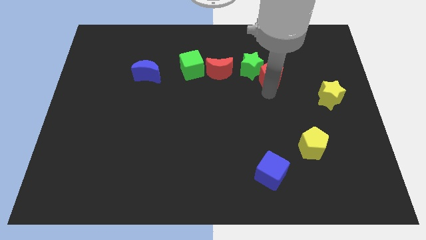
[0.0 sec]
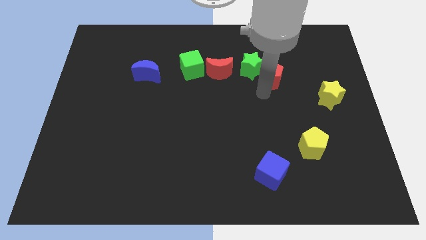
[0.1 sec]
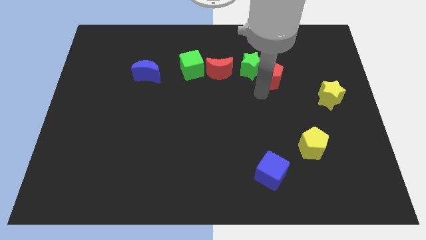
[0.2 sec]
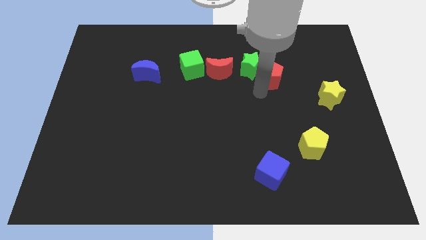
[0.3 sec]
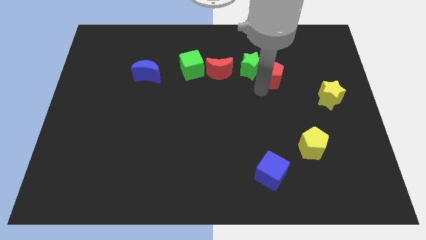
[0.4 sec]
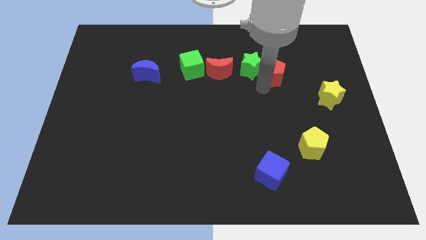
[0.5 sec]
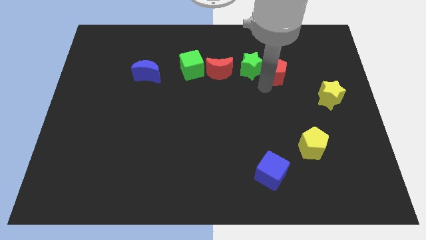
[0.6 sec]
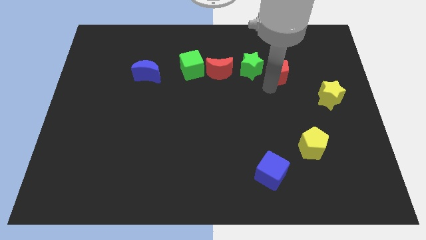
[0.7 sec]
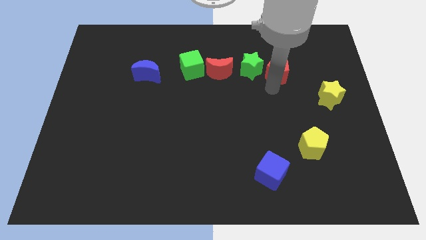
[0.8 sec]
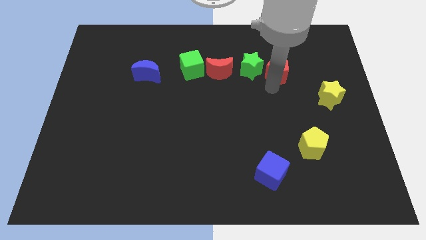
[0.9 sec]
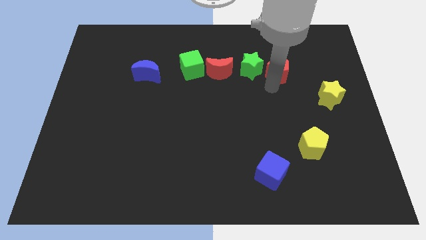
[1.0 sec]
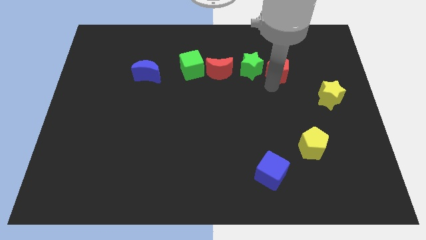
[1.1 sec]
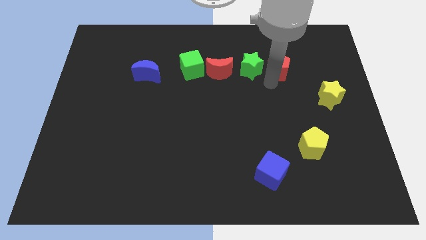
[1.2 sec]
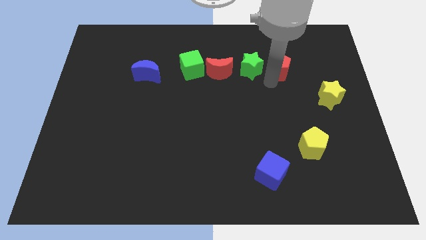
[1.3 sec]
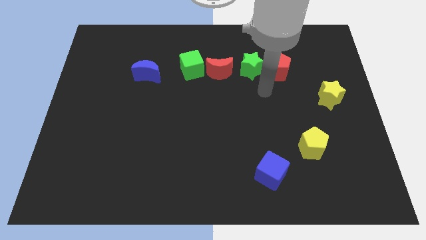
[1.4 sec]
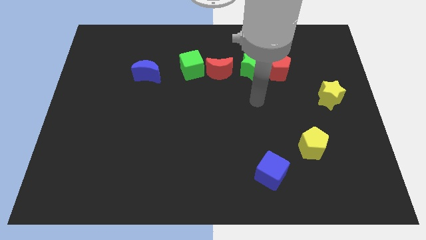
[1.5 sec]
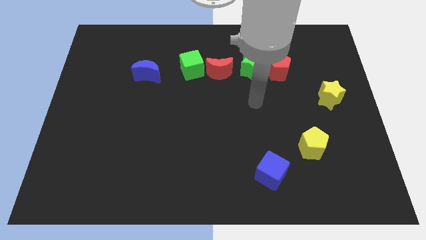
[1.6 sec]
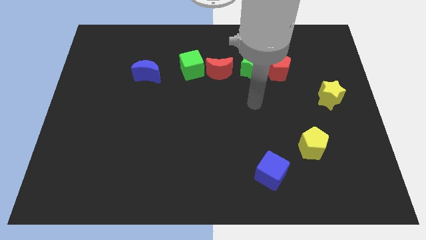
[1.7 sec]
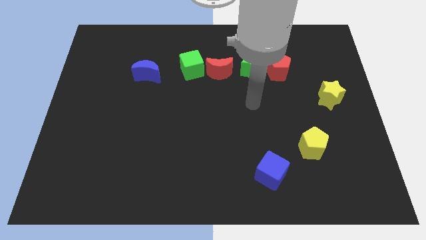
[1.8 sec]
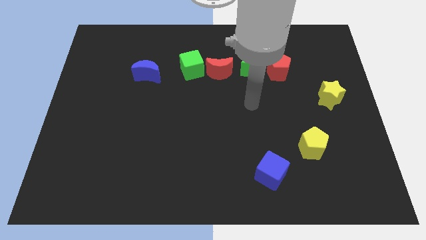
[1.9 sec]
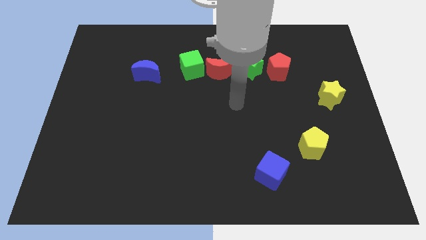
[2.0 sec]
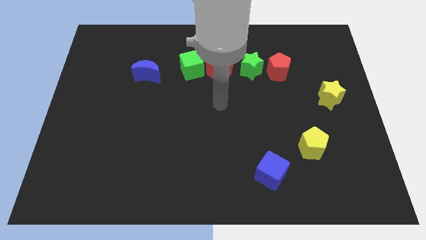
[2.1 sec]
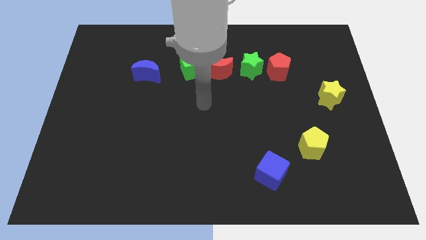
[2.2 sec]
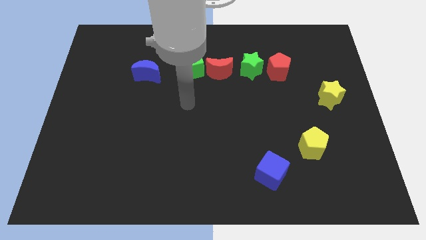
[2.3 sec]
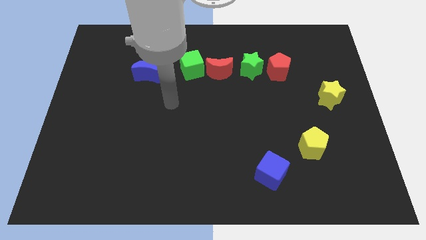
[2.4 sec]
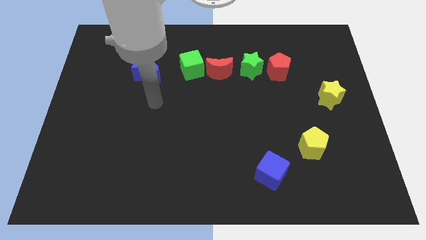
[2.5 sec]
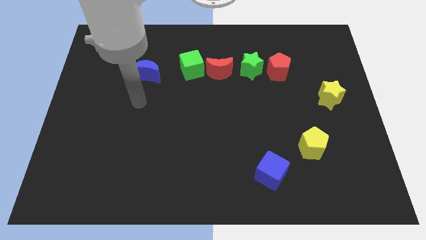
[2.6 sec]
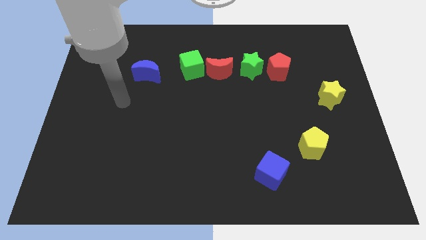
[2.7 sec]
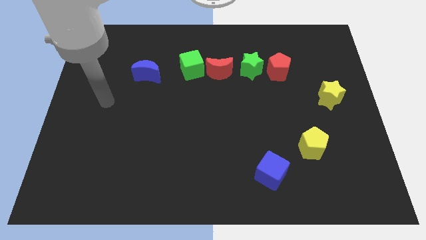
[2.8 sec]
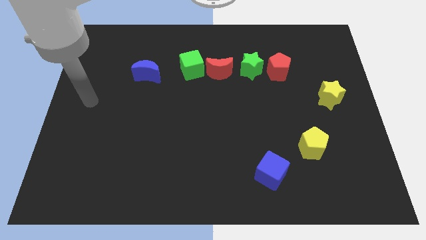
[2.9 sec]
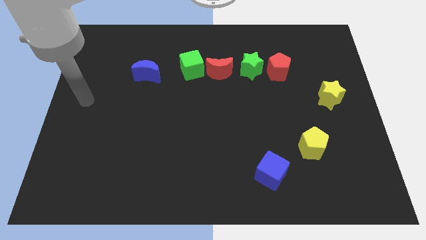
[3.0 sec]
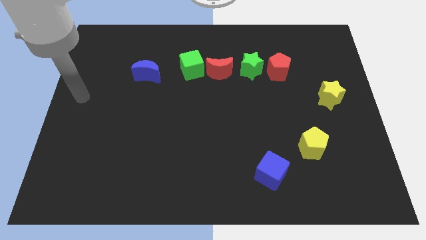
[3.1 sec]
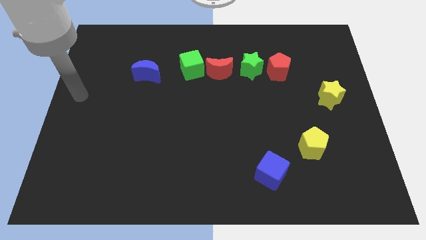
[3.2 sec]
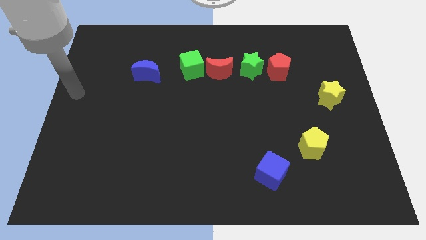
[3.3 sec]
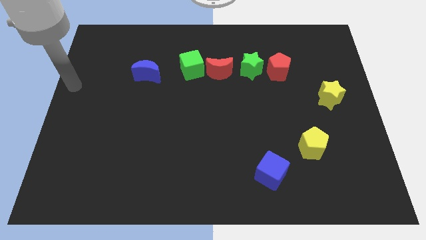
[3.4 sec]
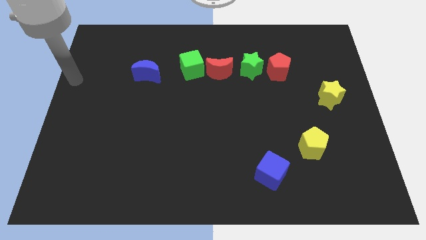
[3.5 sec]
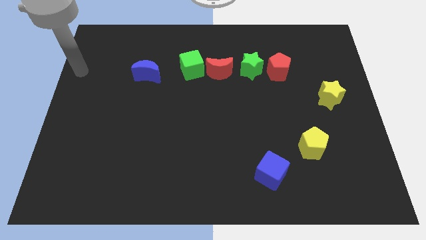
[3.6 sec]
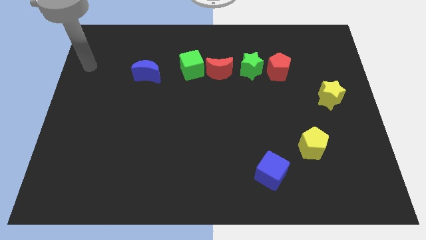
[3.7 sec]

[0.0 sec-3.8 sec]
put the red pentagon to the right side of the green star

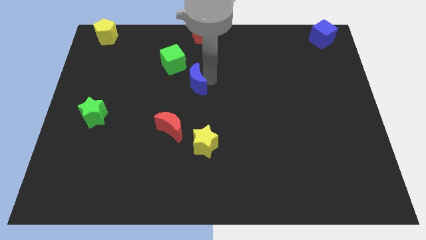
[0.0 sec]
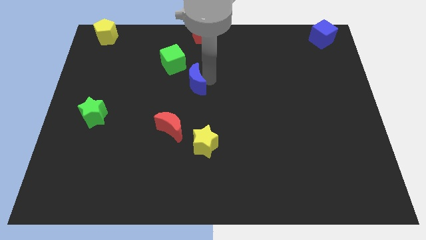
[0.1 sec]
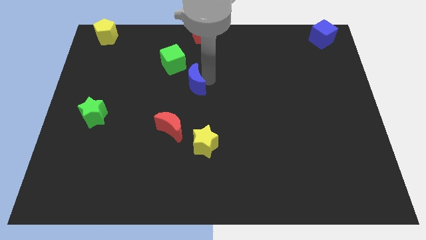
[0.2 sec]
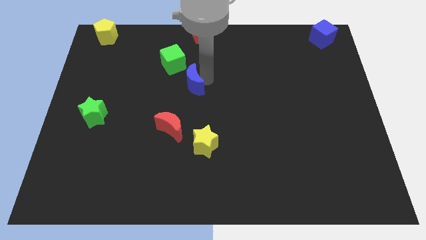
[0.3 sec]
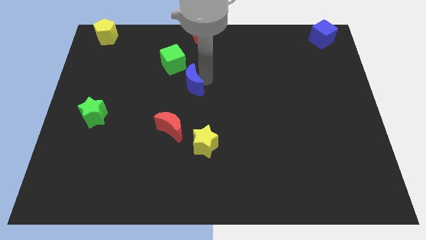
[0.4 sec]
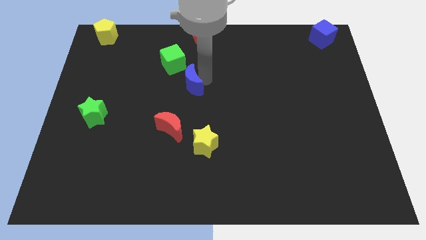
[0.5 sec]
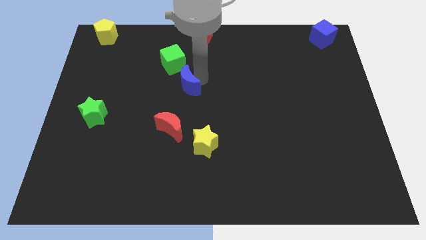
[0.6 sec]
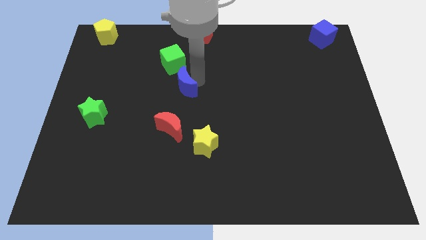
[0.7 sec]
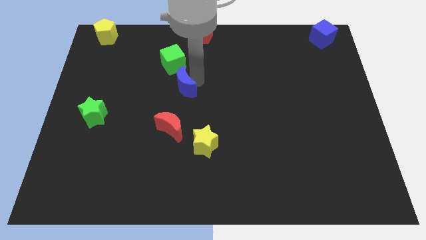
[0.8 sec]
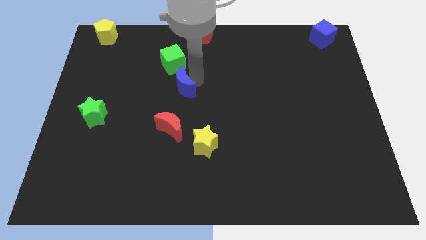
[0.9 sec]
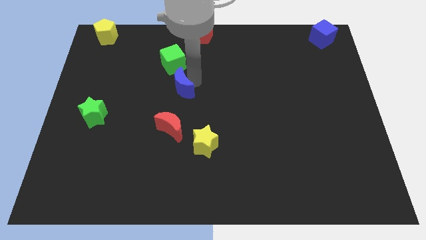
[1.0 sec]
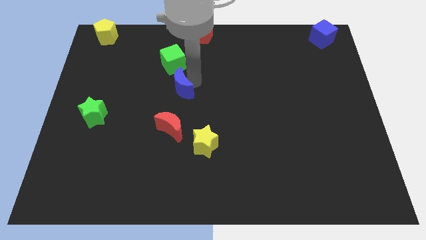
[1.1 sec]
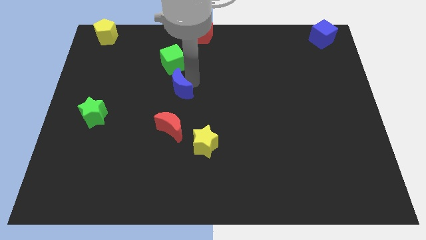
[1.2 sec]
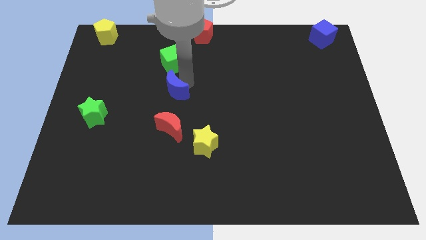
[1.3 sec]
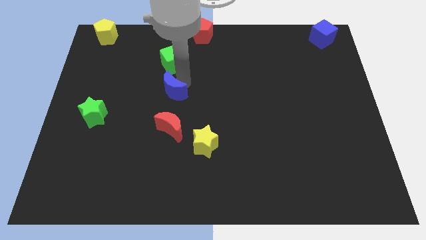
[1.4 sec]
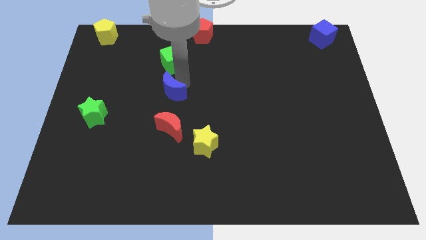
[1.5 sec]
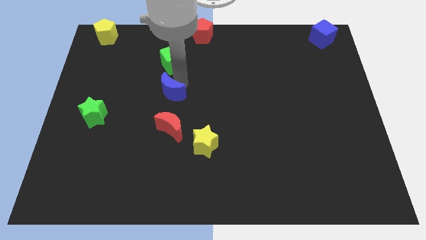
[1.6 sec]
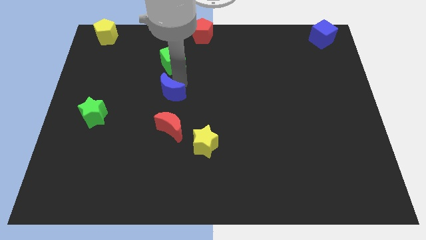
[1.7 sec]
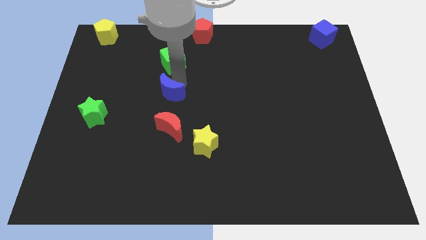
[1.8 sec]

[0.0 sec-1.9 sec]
place the blue crescent in between the green cube and red crescent

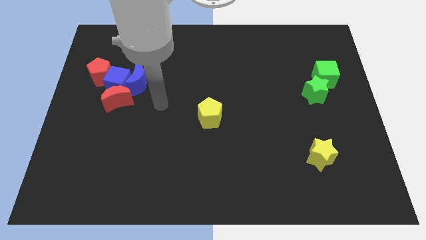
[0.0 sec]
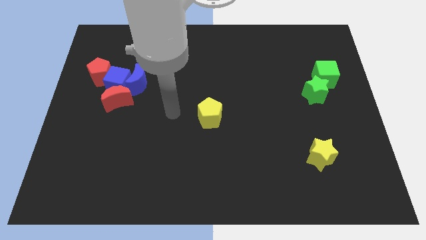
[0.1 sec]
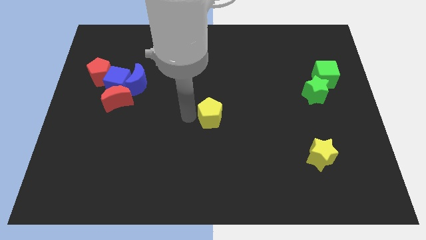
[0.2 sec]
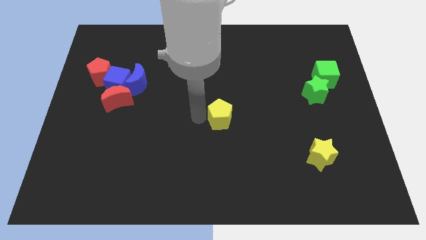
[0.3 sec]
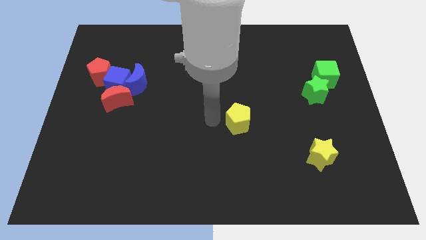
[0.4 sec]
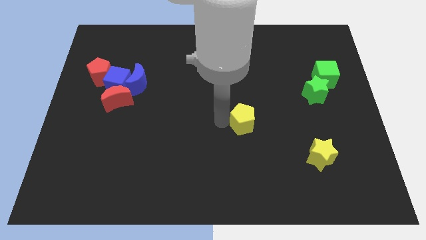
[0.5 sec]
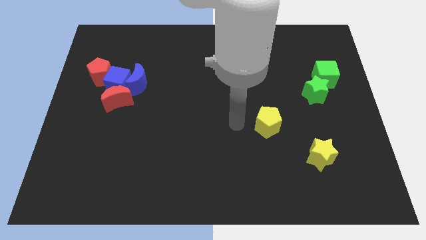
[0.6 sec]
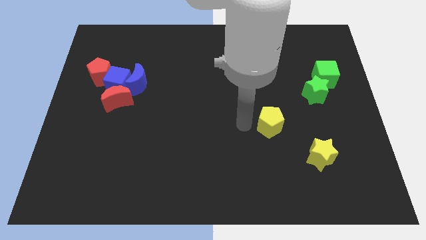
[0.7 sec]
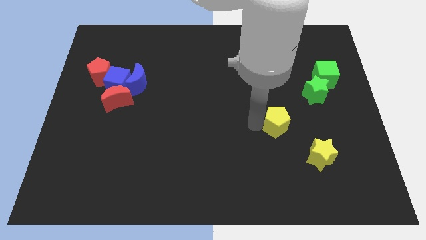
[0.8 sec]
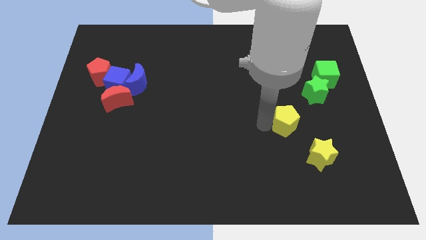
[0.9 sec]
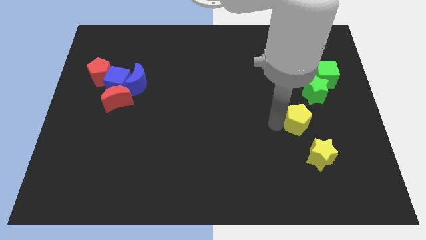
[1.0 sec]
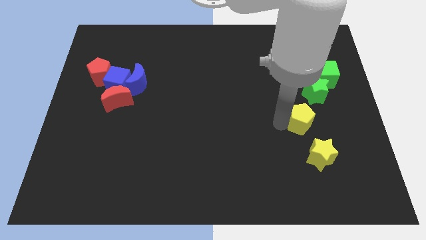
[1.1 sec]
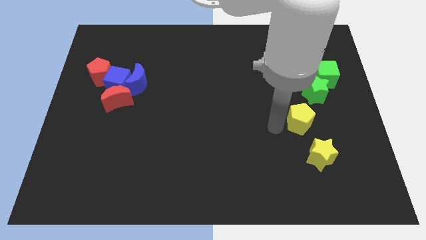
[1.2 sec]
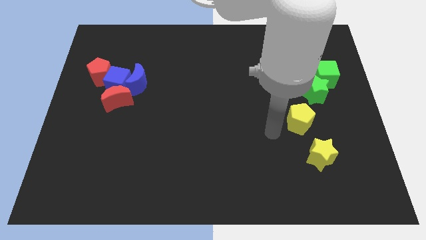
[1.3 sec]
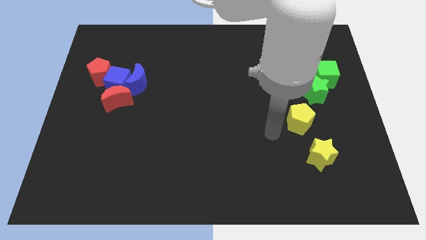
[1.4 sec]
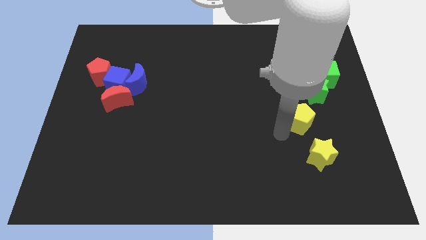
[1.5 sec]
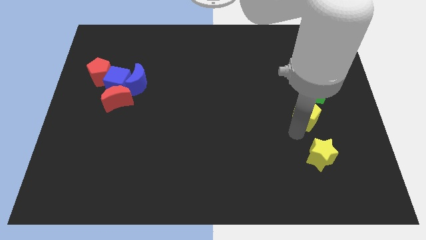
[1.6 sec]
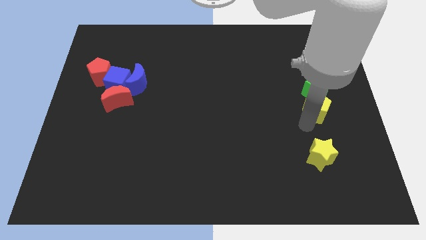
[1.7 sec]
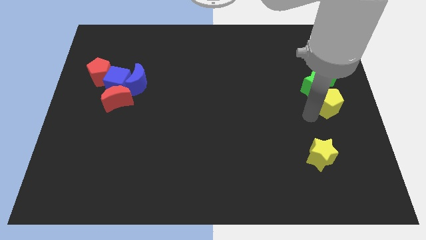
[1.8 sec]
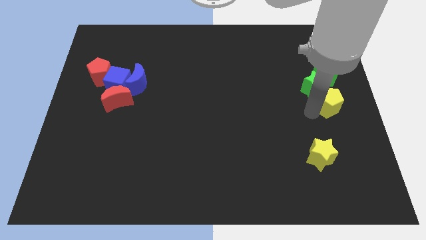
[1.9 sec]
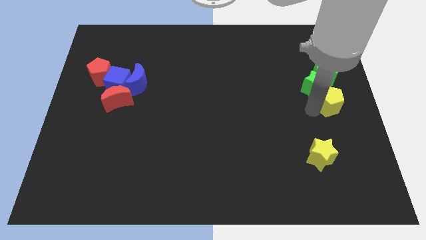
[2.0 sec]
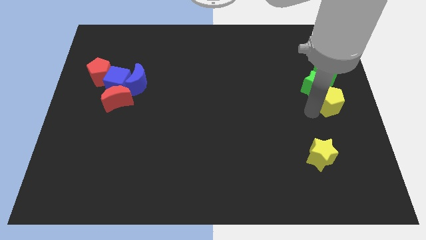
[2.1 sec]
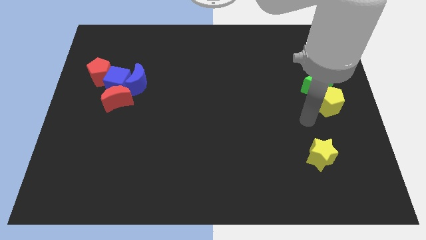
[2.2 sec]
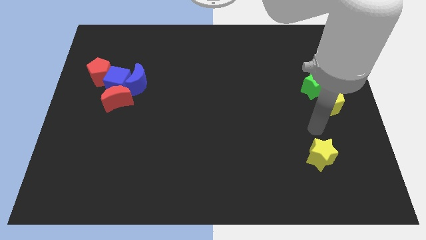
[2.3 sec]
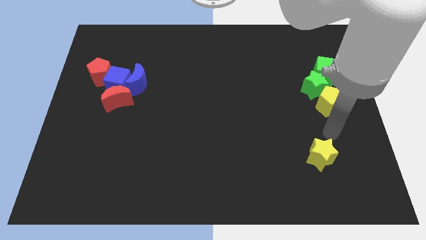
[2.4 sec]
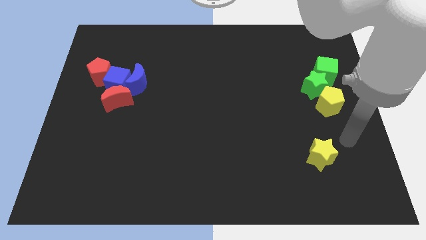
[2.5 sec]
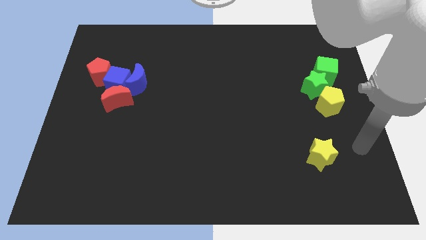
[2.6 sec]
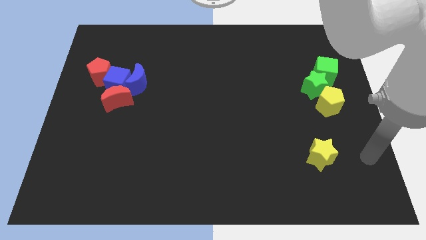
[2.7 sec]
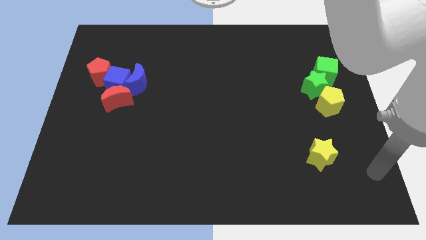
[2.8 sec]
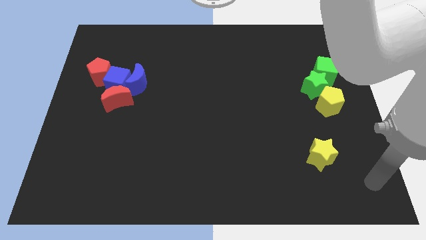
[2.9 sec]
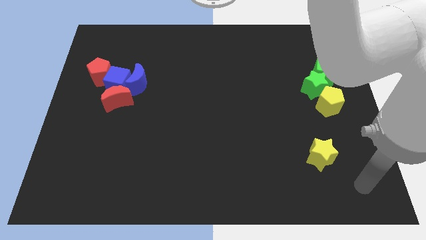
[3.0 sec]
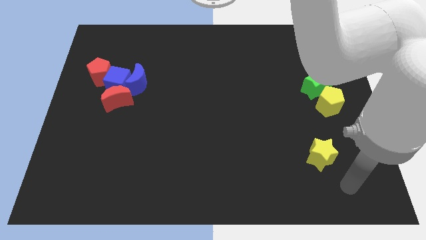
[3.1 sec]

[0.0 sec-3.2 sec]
push the yellow pentagon into the green star

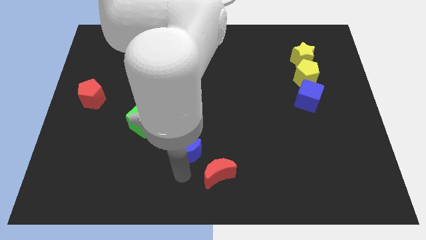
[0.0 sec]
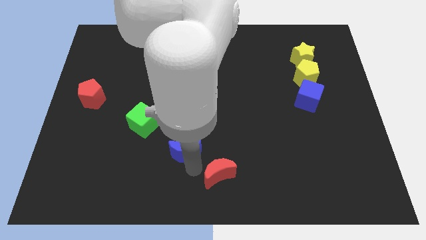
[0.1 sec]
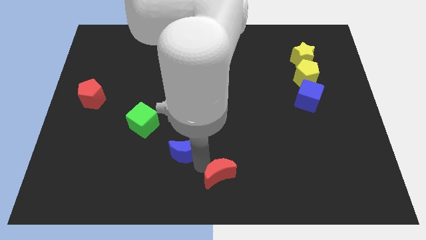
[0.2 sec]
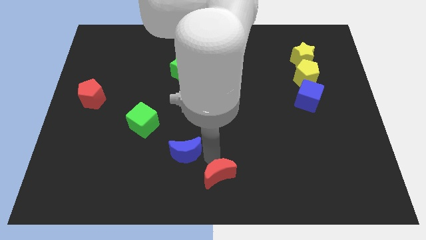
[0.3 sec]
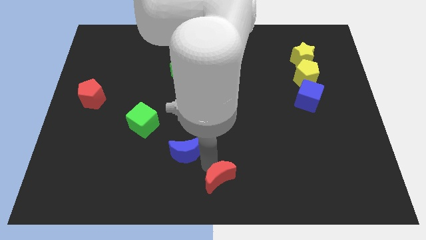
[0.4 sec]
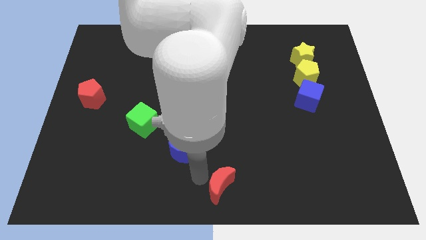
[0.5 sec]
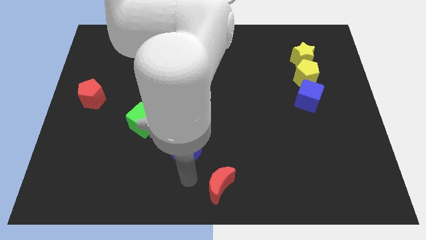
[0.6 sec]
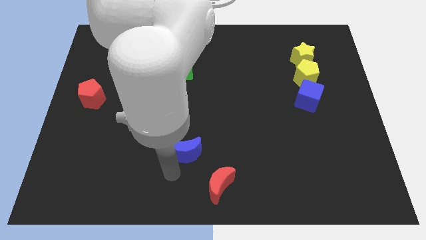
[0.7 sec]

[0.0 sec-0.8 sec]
move the red moon slightly downwards
